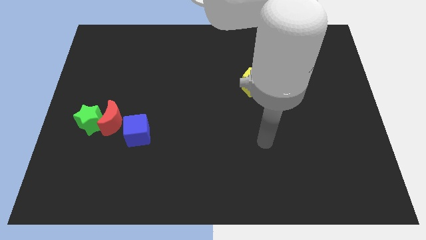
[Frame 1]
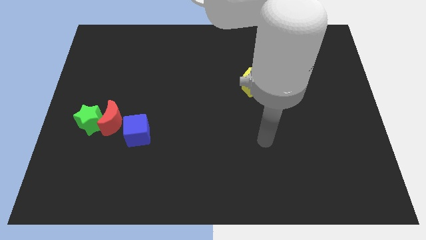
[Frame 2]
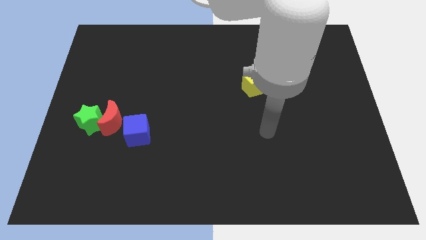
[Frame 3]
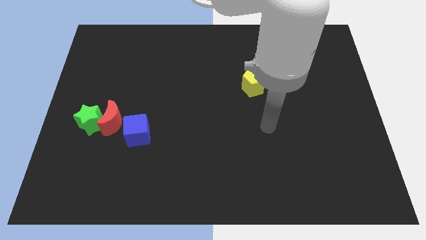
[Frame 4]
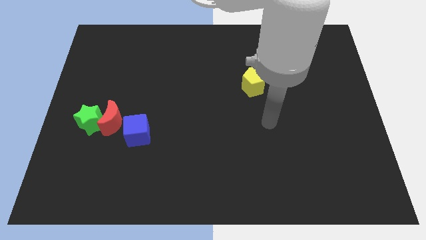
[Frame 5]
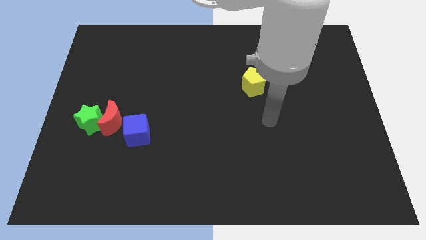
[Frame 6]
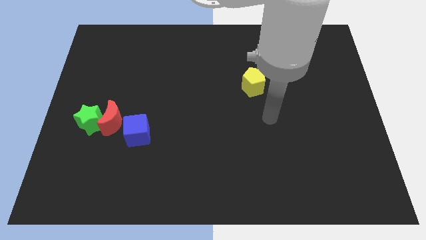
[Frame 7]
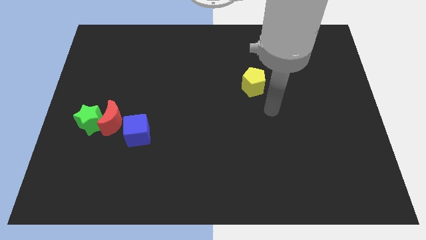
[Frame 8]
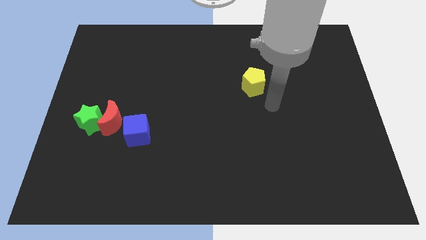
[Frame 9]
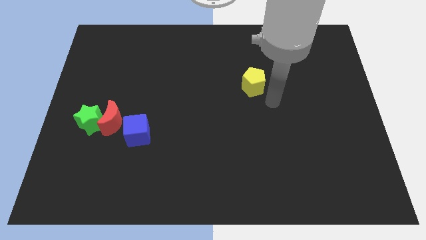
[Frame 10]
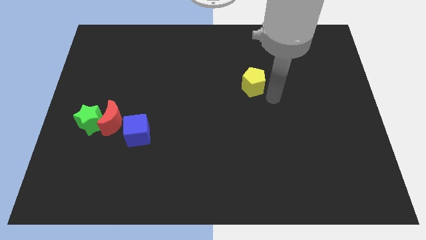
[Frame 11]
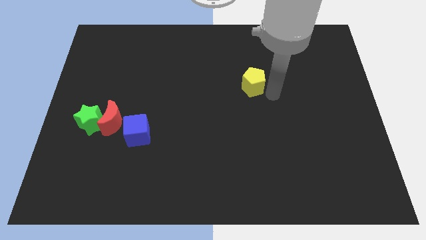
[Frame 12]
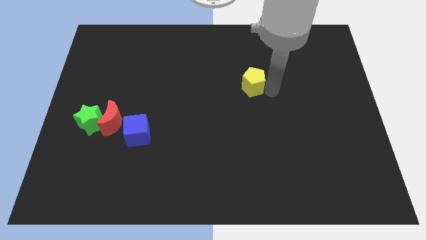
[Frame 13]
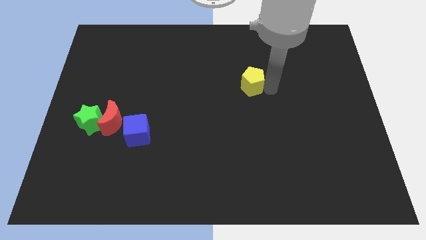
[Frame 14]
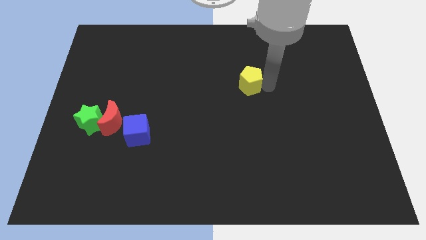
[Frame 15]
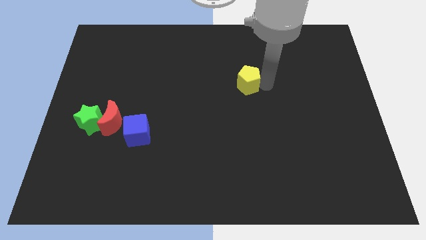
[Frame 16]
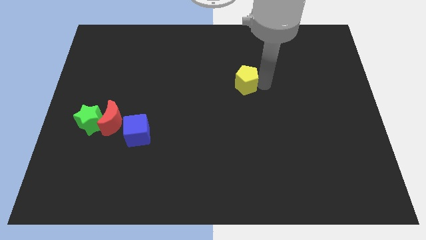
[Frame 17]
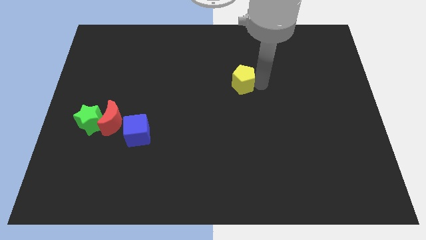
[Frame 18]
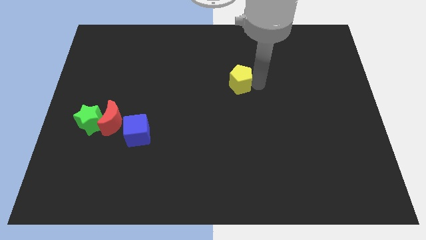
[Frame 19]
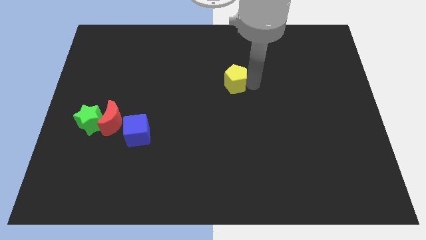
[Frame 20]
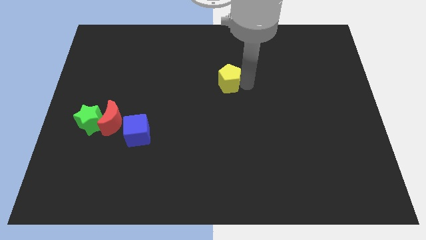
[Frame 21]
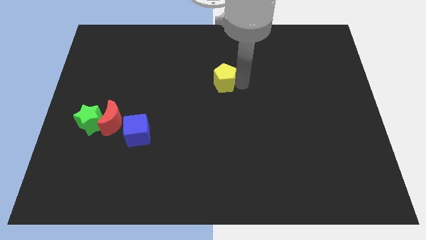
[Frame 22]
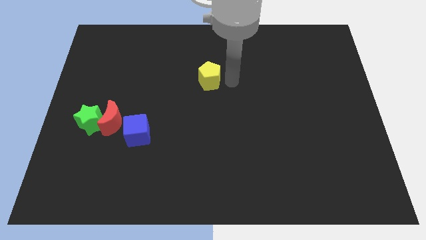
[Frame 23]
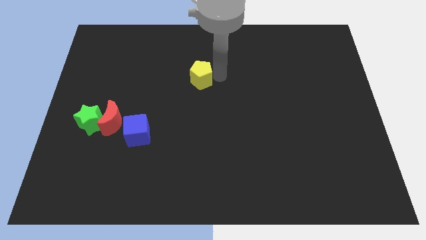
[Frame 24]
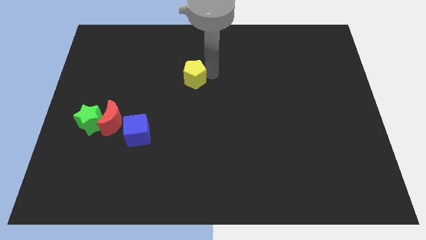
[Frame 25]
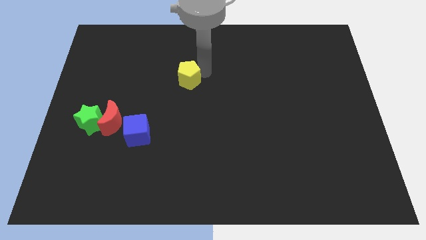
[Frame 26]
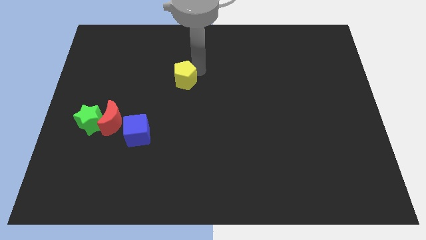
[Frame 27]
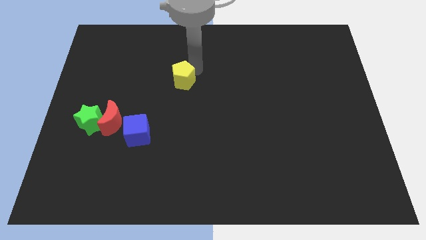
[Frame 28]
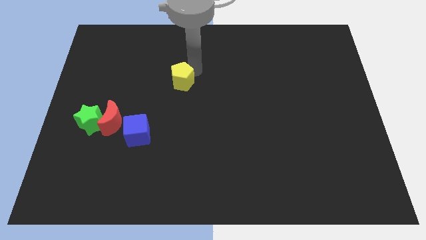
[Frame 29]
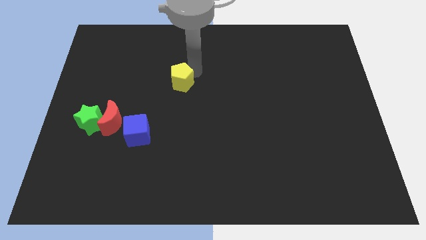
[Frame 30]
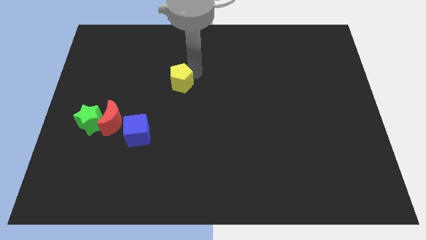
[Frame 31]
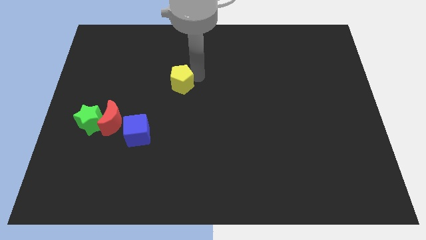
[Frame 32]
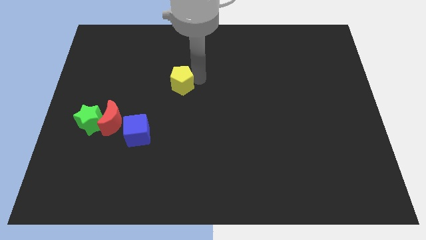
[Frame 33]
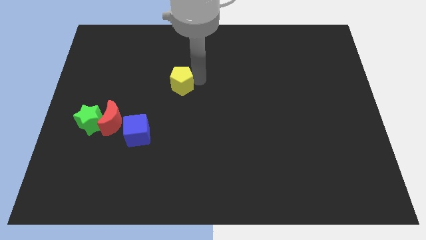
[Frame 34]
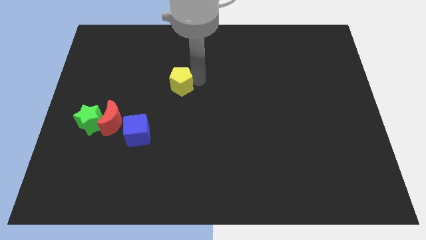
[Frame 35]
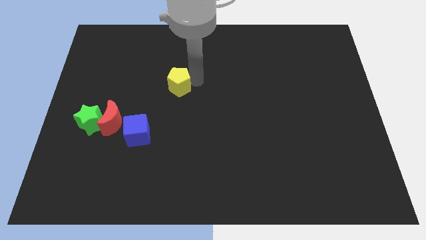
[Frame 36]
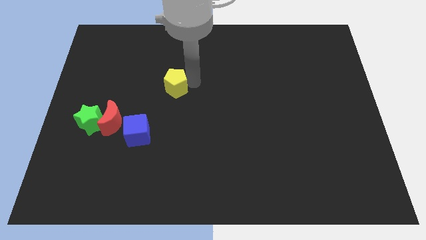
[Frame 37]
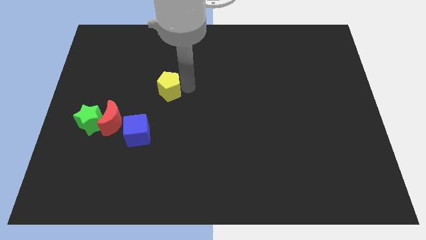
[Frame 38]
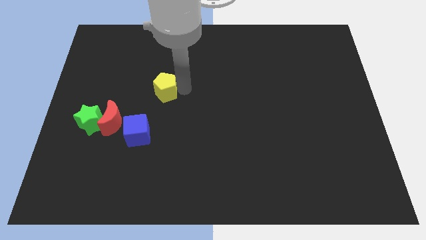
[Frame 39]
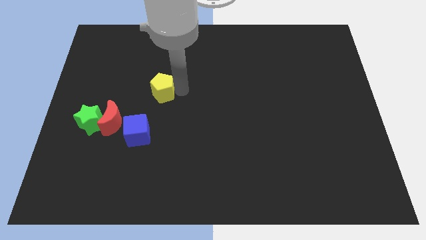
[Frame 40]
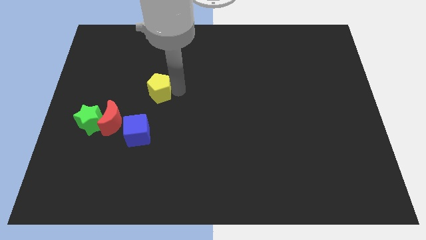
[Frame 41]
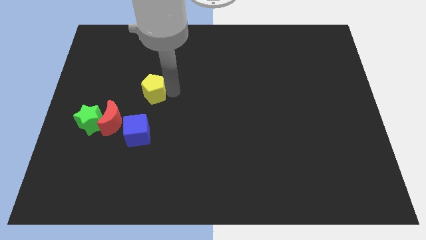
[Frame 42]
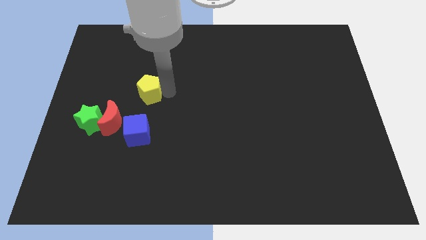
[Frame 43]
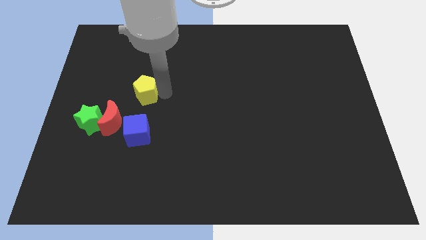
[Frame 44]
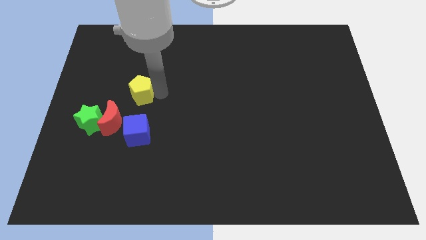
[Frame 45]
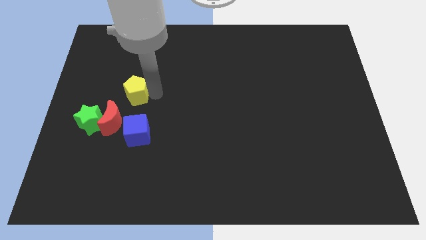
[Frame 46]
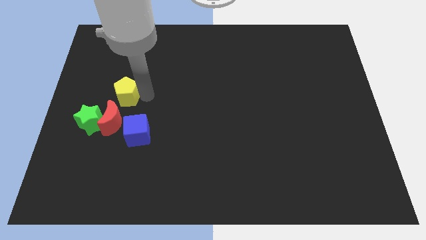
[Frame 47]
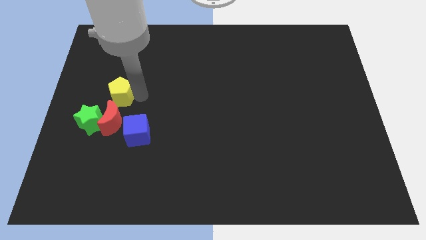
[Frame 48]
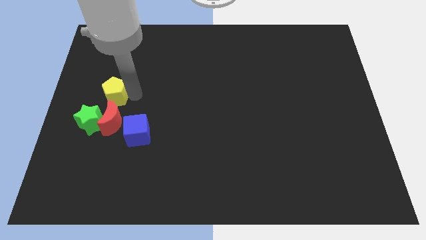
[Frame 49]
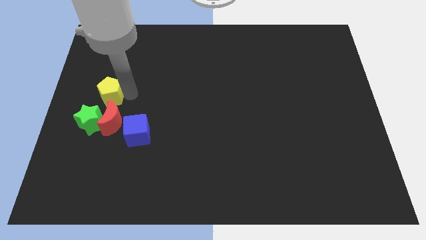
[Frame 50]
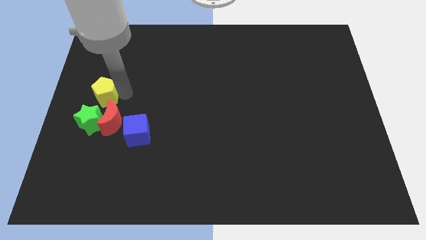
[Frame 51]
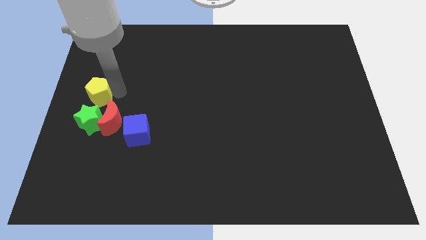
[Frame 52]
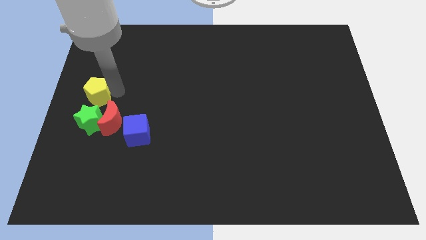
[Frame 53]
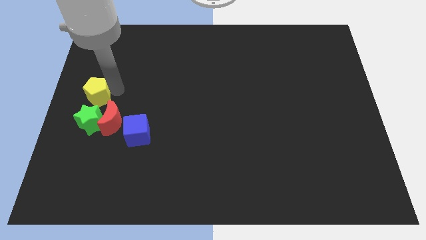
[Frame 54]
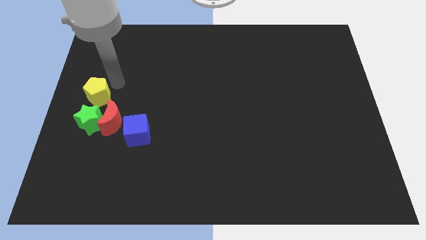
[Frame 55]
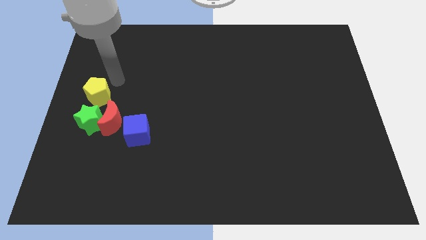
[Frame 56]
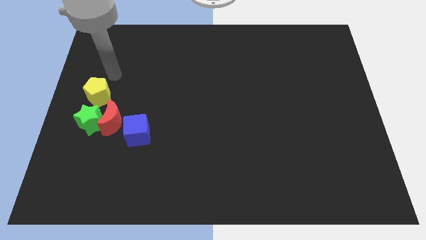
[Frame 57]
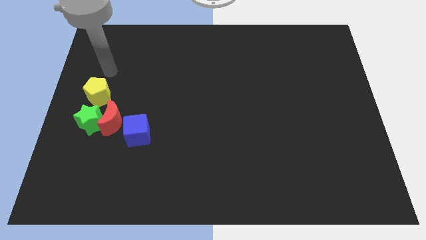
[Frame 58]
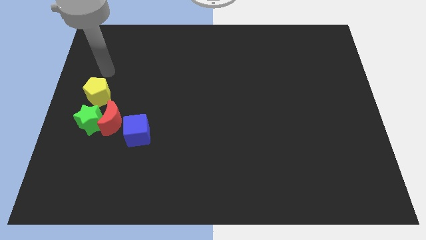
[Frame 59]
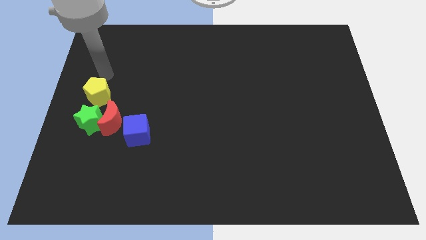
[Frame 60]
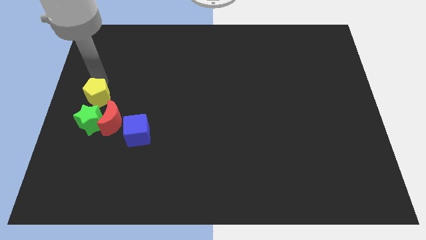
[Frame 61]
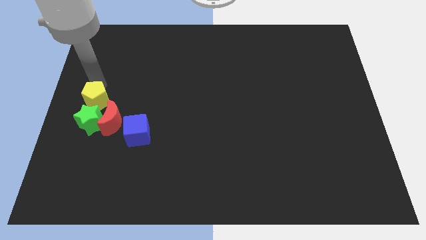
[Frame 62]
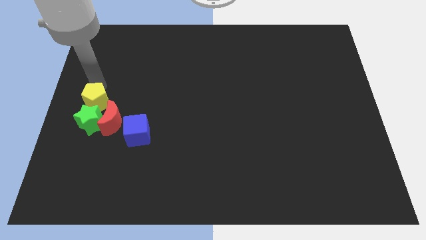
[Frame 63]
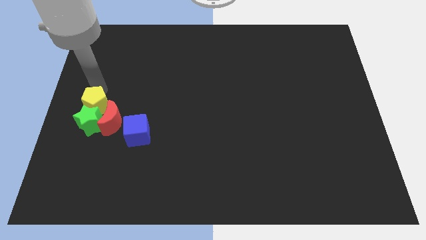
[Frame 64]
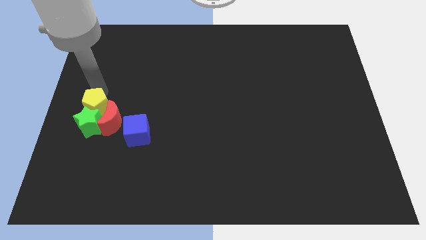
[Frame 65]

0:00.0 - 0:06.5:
slide the yellow block to the green block

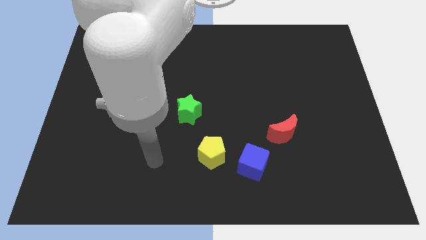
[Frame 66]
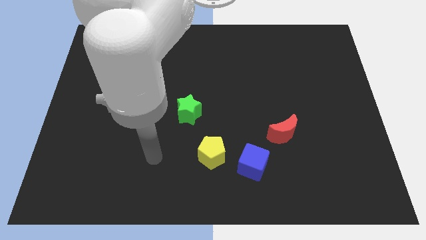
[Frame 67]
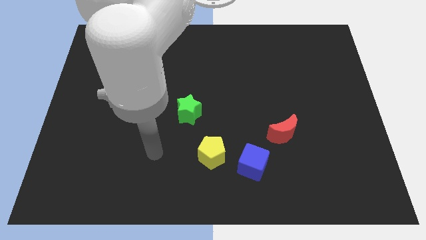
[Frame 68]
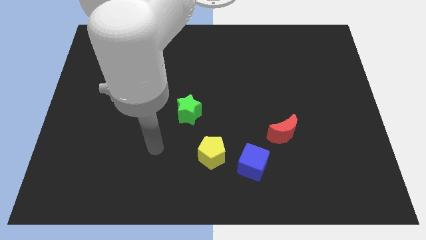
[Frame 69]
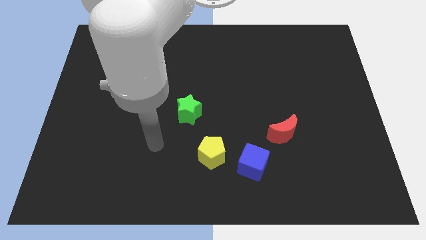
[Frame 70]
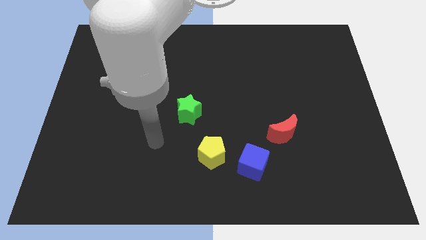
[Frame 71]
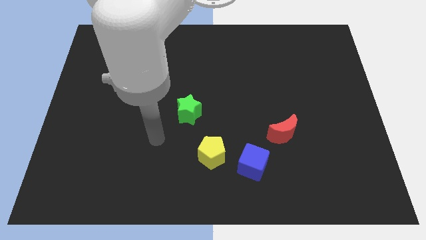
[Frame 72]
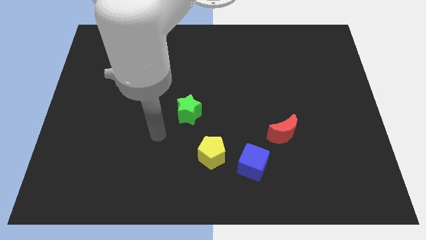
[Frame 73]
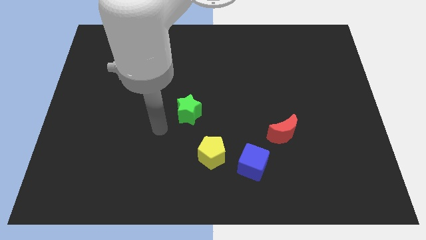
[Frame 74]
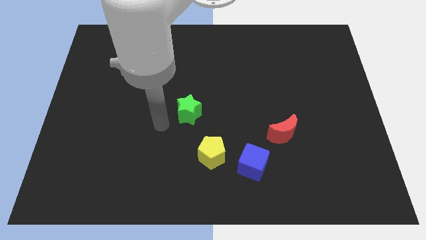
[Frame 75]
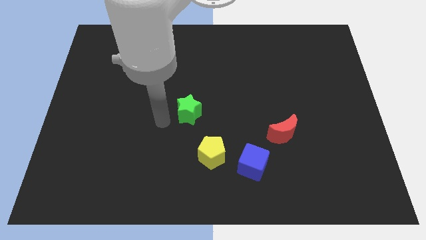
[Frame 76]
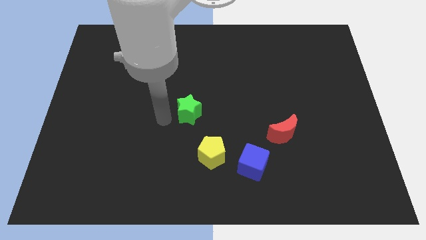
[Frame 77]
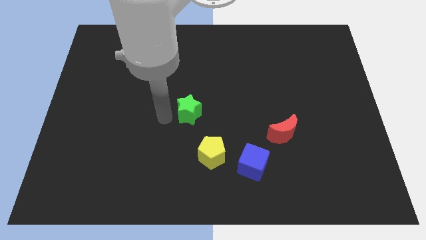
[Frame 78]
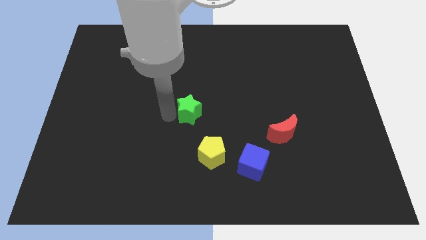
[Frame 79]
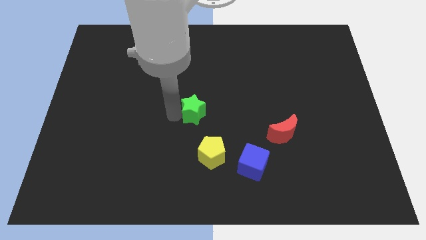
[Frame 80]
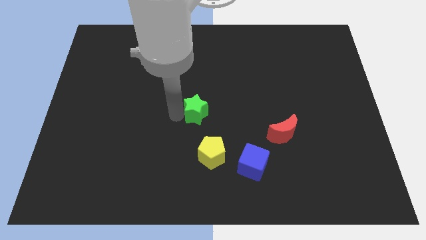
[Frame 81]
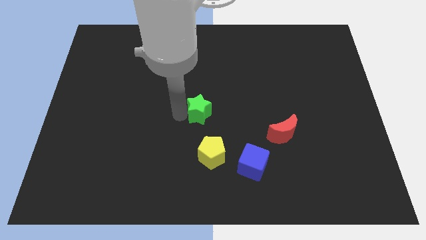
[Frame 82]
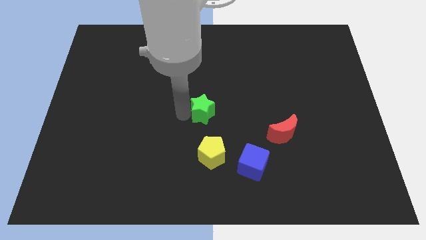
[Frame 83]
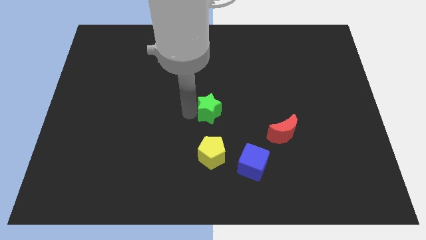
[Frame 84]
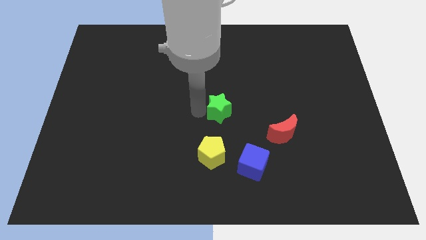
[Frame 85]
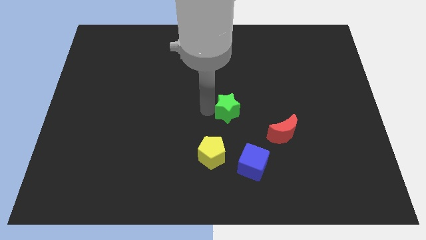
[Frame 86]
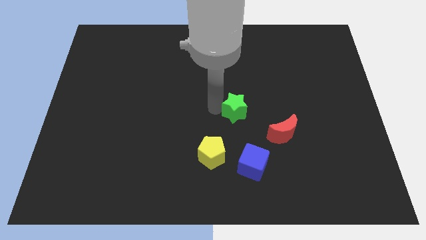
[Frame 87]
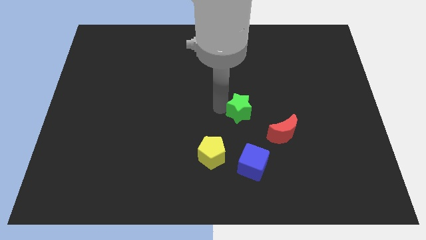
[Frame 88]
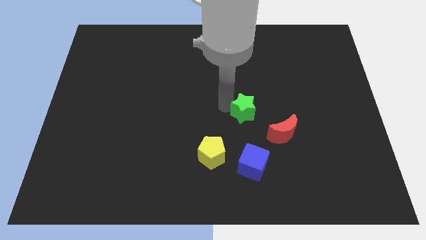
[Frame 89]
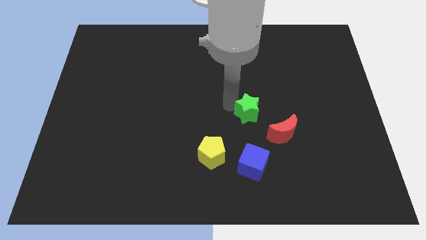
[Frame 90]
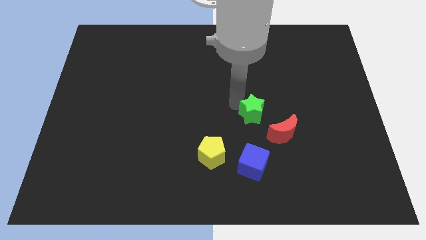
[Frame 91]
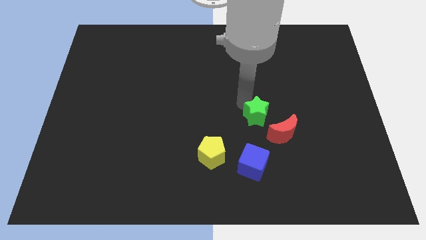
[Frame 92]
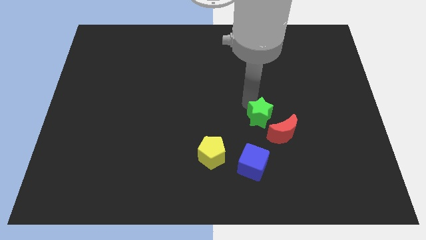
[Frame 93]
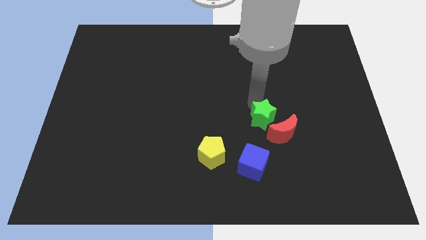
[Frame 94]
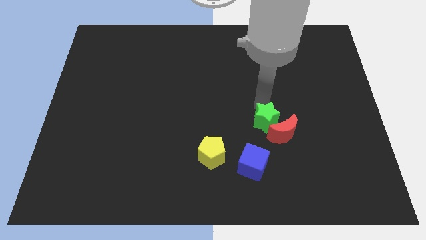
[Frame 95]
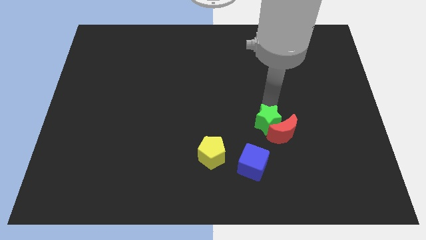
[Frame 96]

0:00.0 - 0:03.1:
put the green block towards the moon
